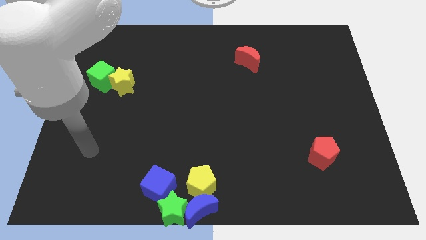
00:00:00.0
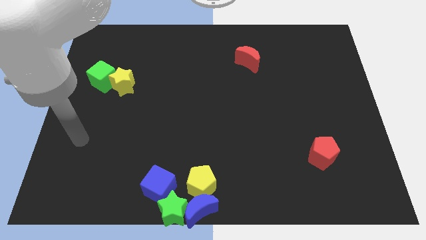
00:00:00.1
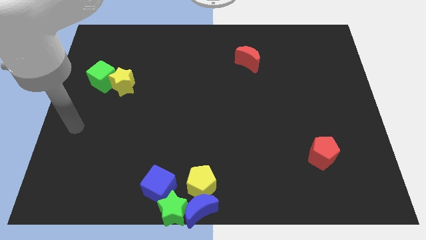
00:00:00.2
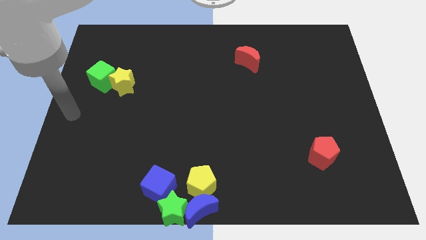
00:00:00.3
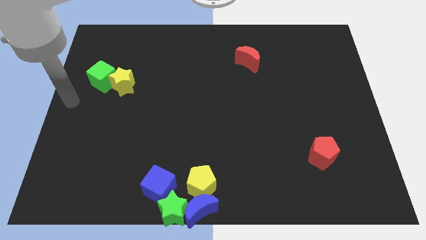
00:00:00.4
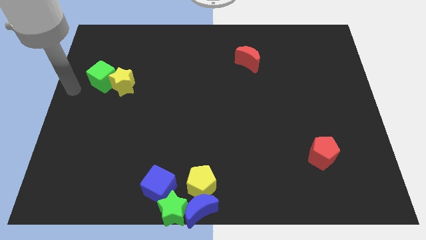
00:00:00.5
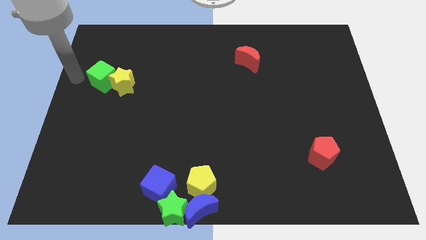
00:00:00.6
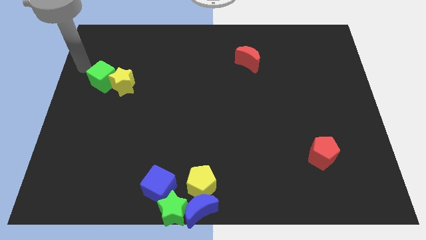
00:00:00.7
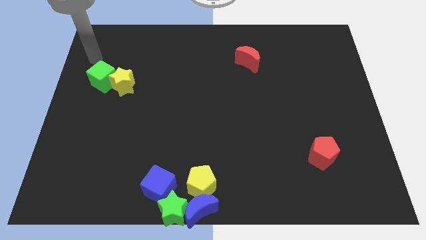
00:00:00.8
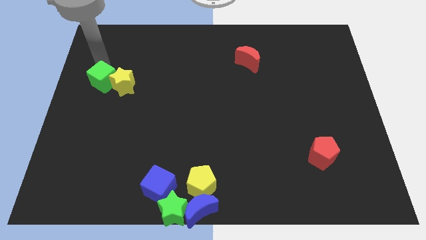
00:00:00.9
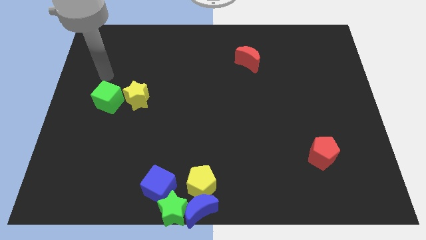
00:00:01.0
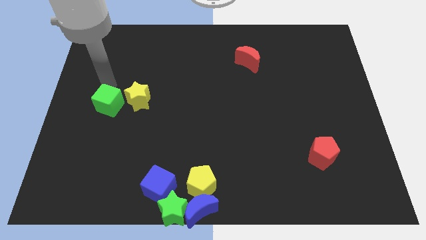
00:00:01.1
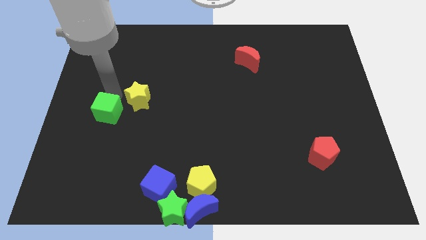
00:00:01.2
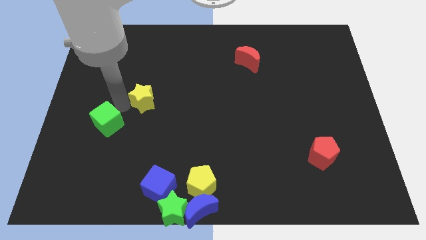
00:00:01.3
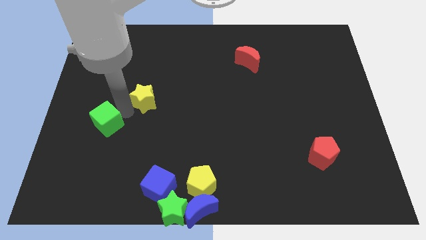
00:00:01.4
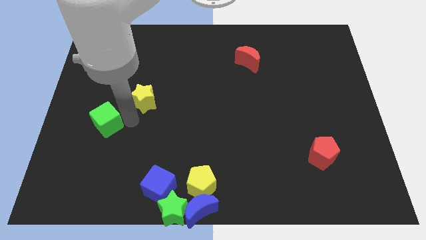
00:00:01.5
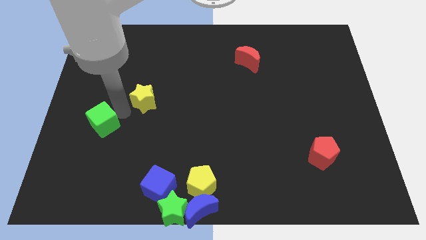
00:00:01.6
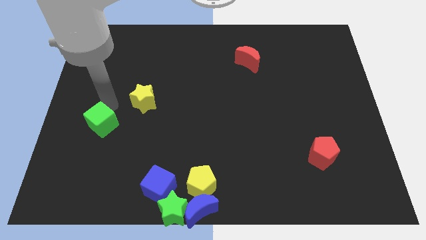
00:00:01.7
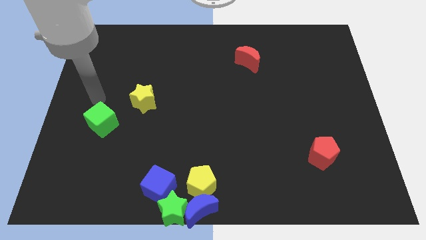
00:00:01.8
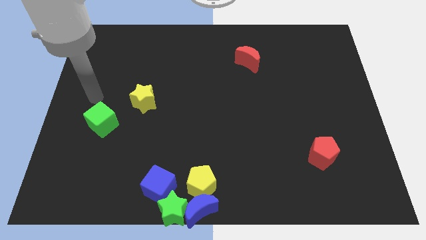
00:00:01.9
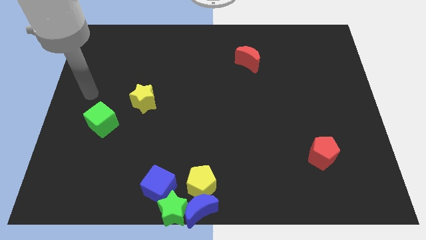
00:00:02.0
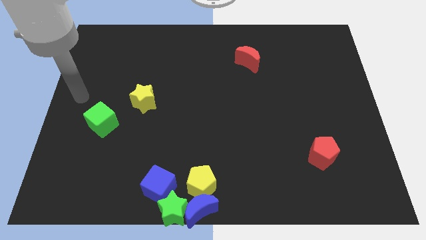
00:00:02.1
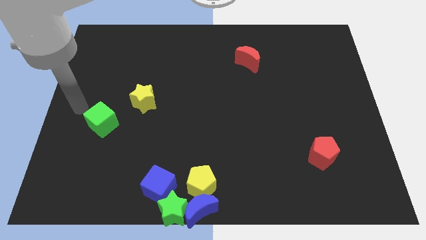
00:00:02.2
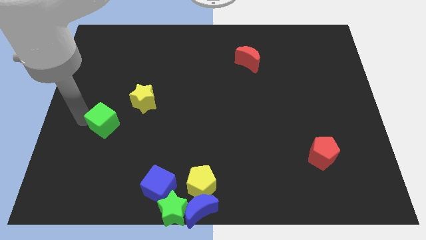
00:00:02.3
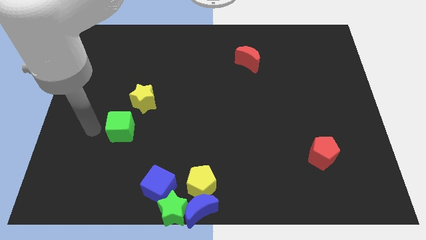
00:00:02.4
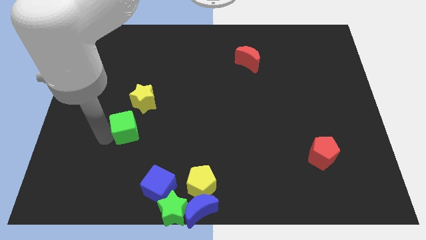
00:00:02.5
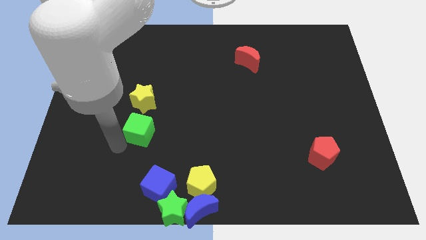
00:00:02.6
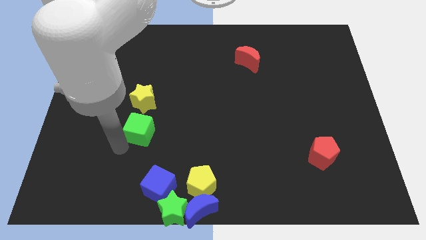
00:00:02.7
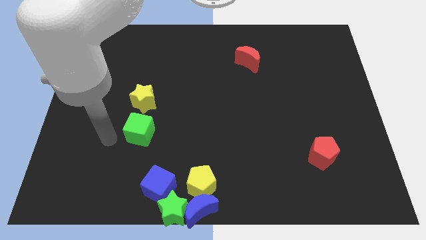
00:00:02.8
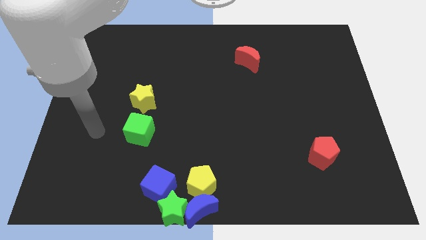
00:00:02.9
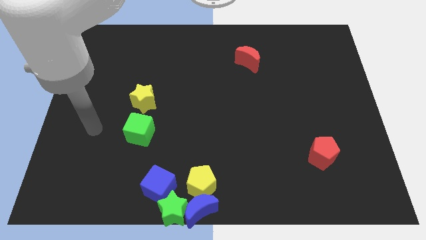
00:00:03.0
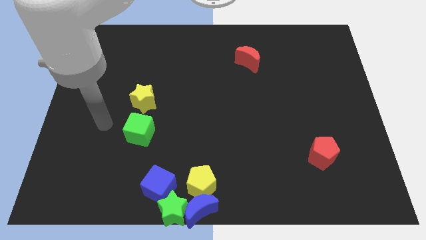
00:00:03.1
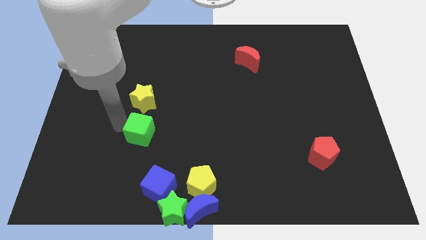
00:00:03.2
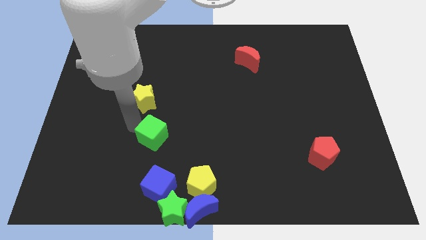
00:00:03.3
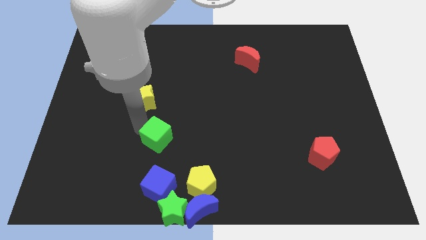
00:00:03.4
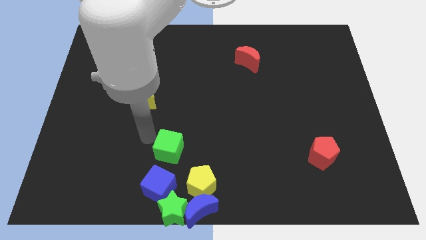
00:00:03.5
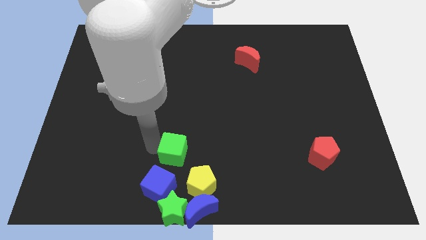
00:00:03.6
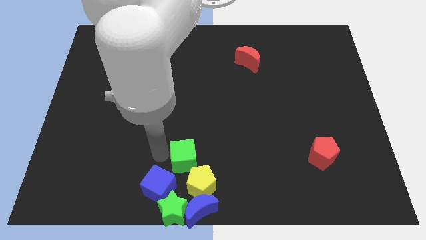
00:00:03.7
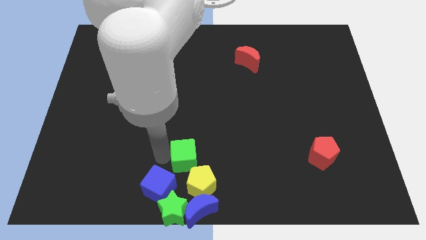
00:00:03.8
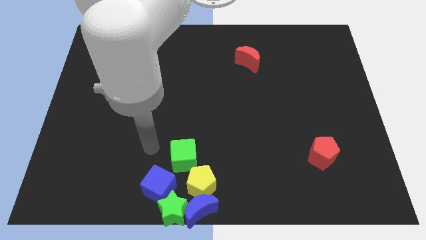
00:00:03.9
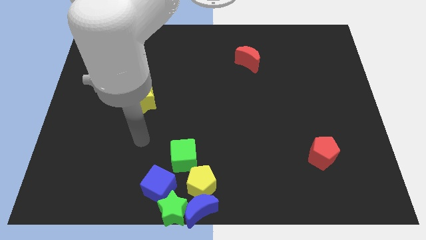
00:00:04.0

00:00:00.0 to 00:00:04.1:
move green cube above the blue cube and yellow pentagon

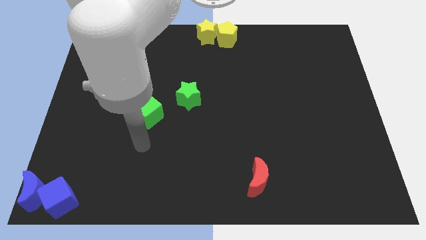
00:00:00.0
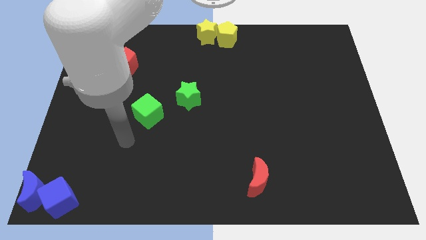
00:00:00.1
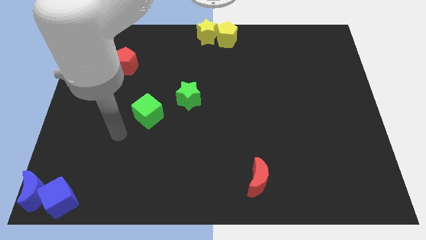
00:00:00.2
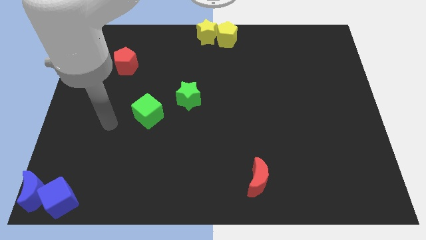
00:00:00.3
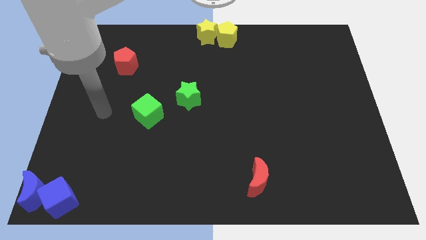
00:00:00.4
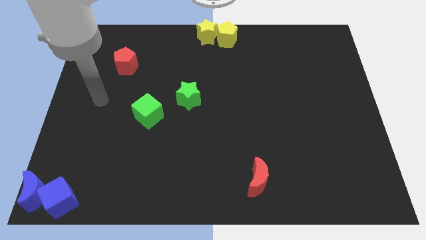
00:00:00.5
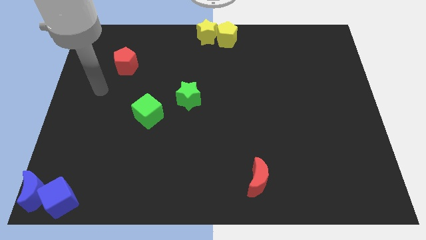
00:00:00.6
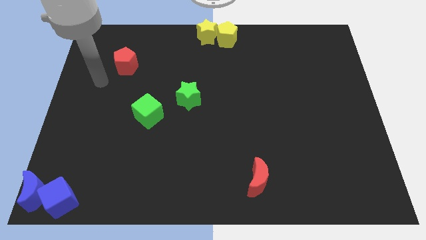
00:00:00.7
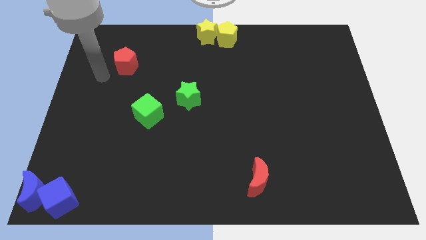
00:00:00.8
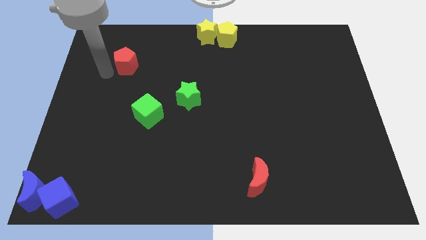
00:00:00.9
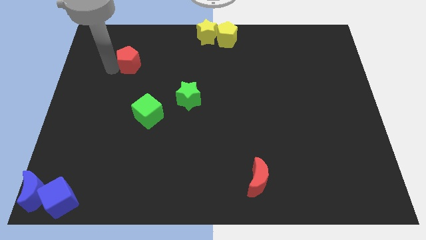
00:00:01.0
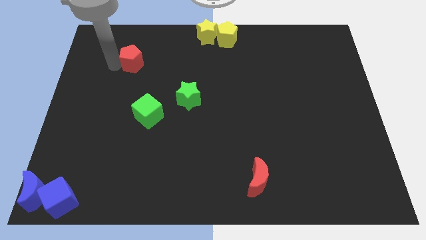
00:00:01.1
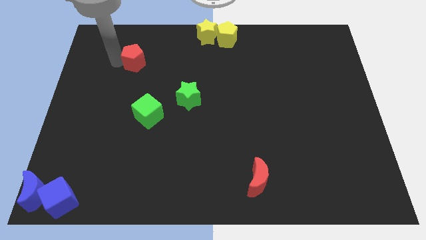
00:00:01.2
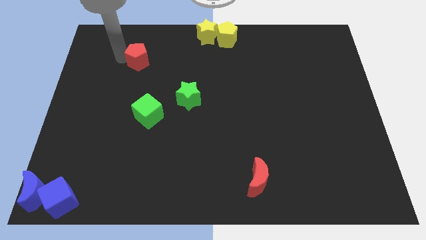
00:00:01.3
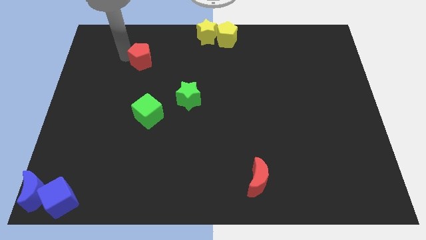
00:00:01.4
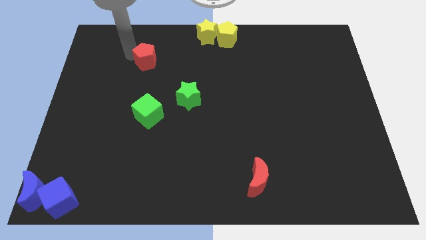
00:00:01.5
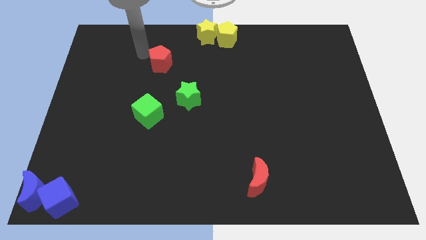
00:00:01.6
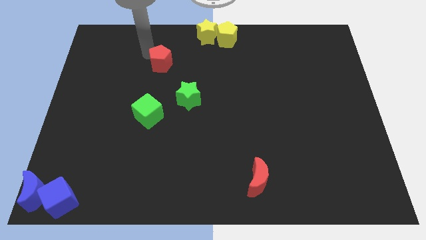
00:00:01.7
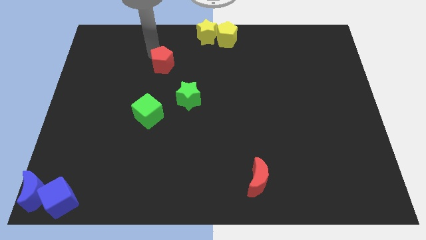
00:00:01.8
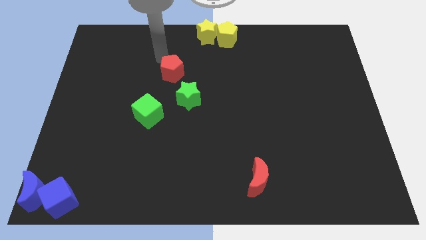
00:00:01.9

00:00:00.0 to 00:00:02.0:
slide the red pentagon towards the green star

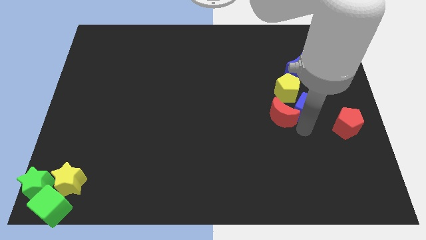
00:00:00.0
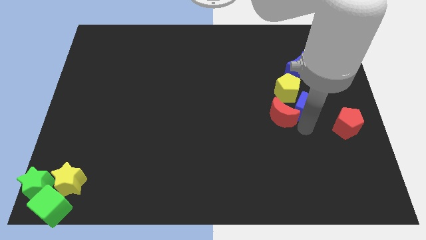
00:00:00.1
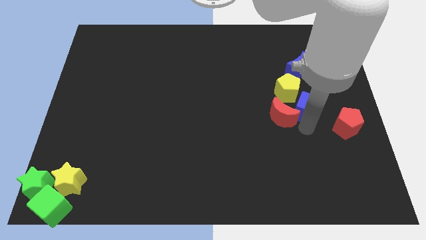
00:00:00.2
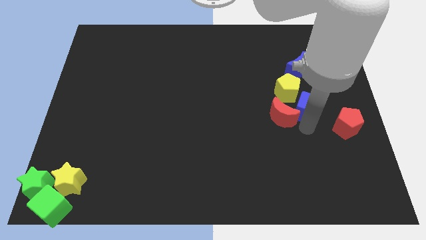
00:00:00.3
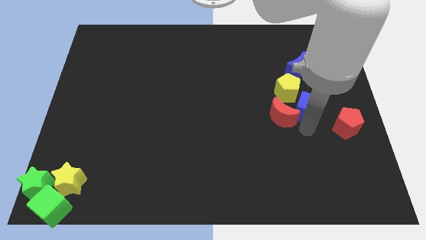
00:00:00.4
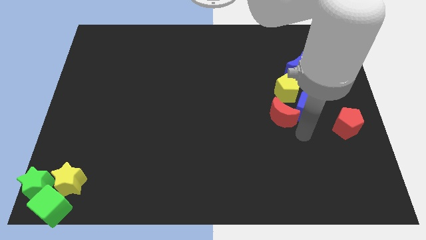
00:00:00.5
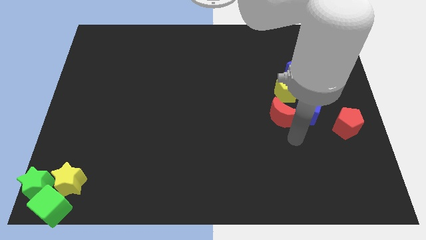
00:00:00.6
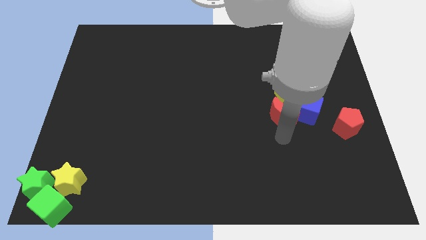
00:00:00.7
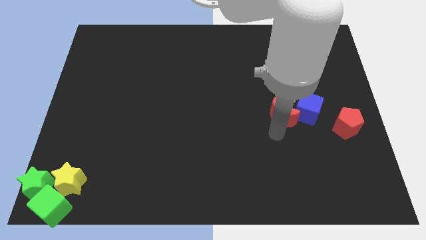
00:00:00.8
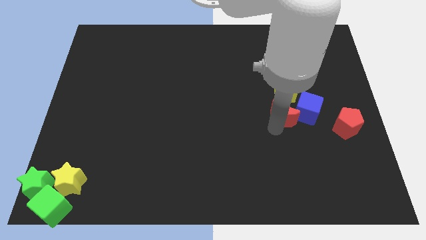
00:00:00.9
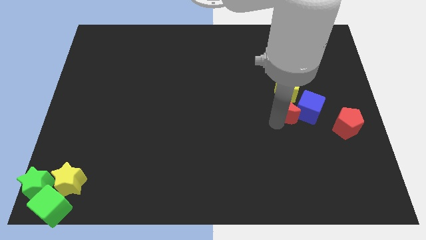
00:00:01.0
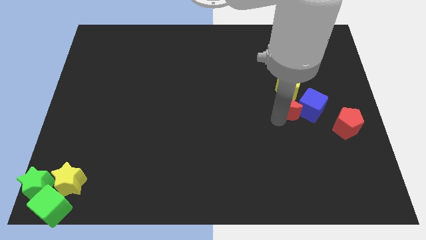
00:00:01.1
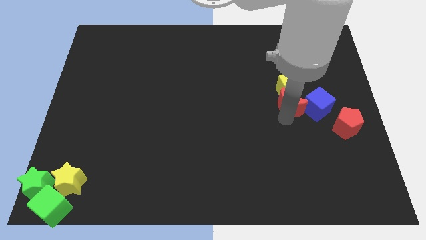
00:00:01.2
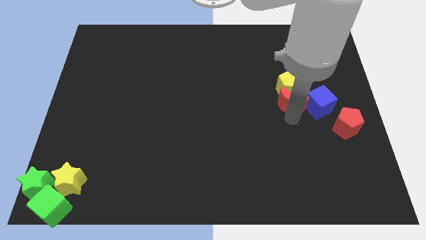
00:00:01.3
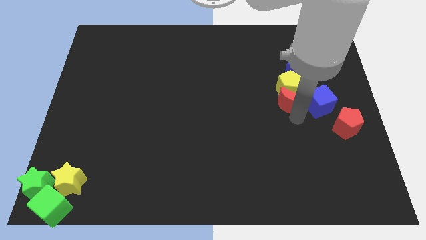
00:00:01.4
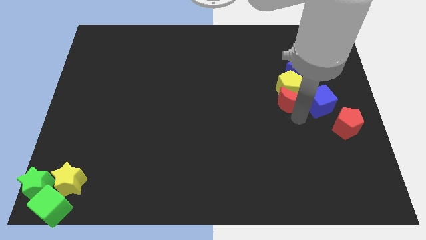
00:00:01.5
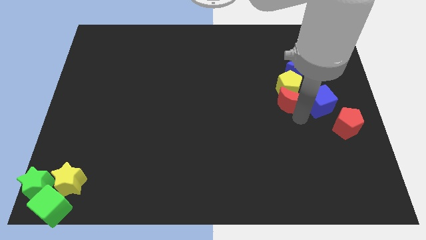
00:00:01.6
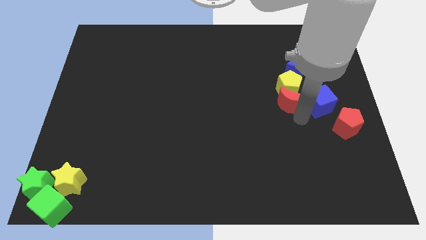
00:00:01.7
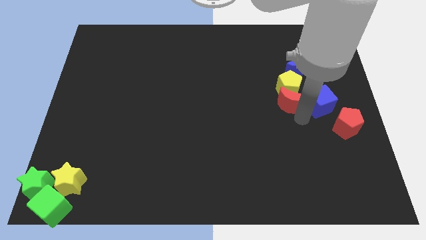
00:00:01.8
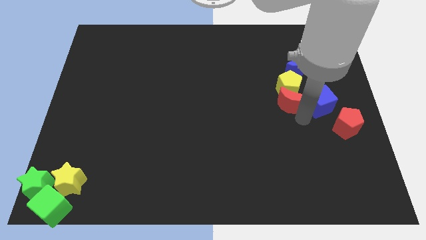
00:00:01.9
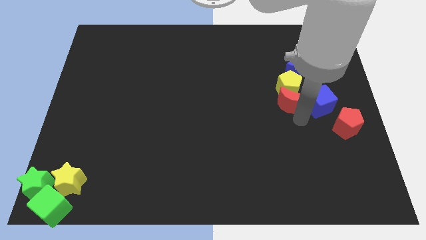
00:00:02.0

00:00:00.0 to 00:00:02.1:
move the red crescent to the bottom of the yellow pentagon

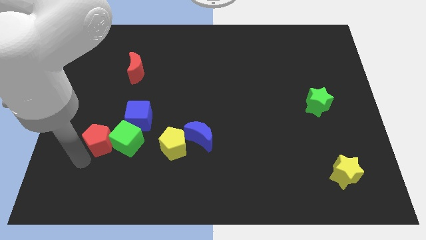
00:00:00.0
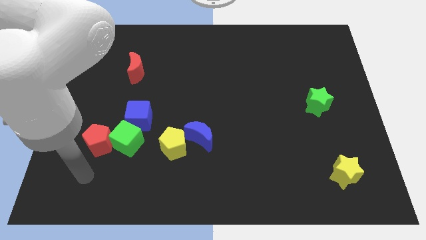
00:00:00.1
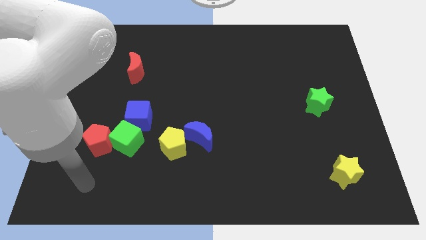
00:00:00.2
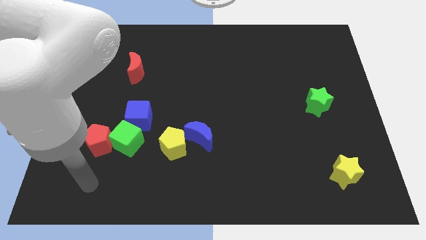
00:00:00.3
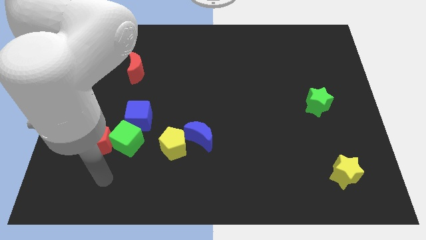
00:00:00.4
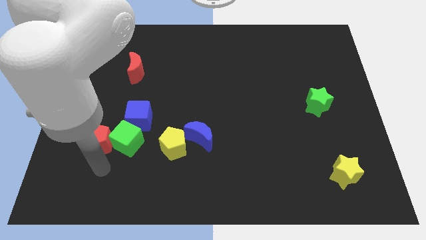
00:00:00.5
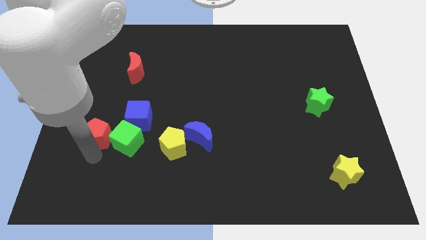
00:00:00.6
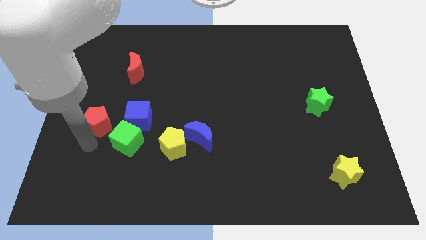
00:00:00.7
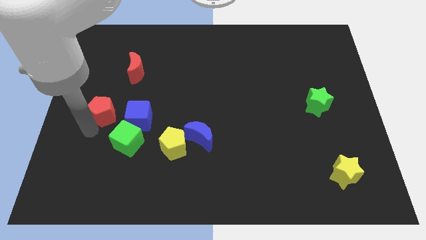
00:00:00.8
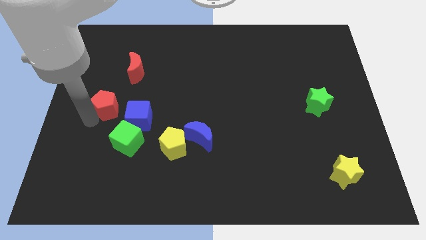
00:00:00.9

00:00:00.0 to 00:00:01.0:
separate the red pentagon from the green cube
